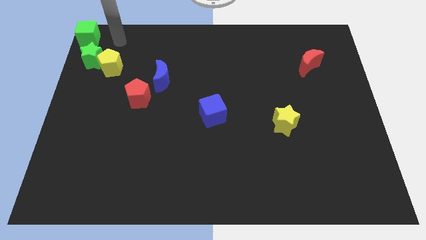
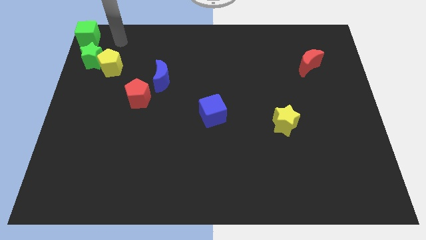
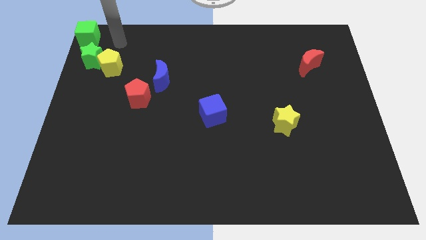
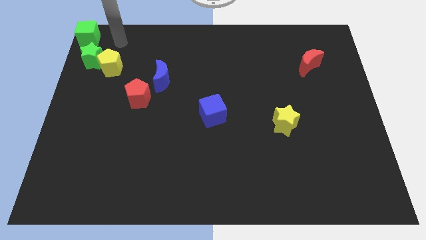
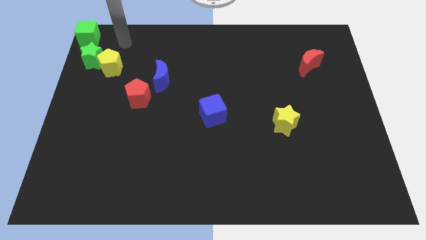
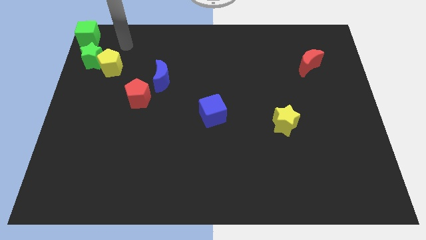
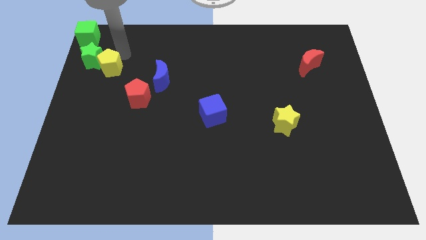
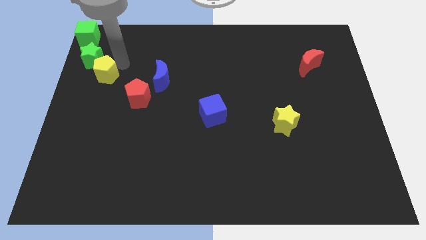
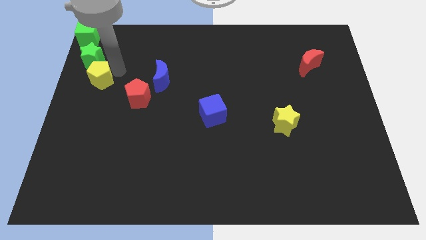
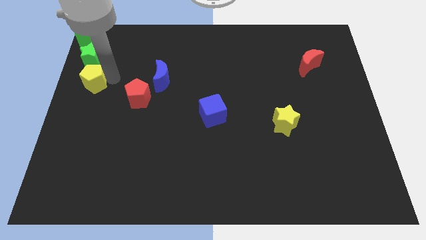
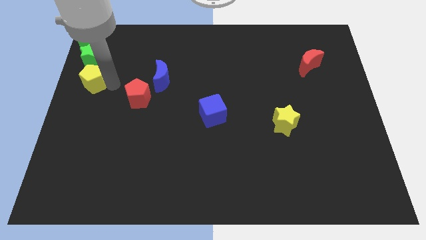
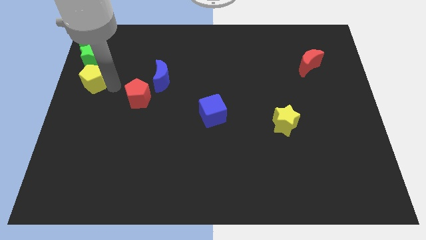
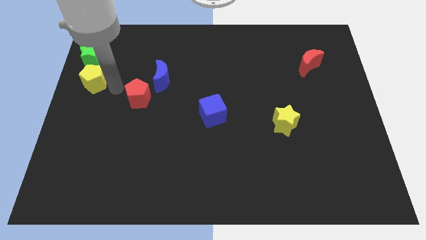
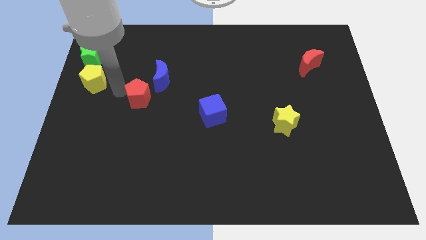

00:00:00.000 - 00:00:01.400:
push the yellow pentagon to the bottom of the green star

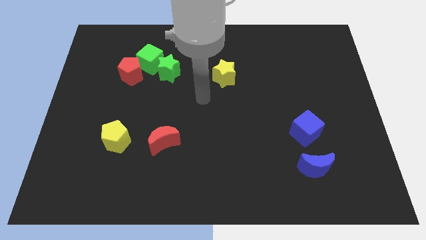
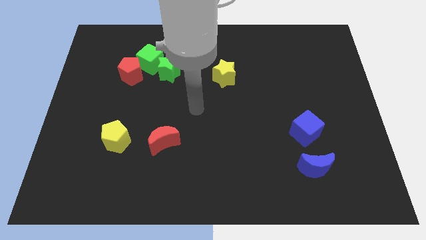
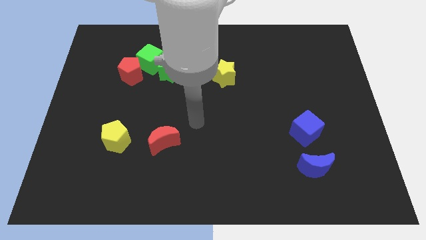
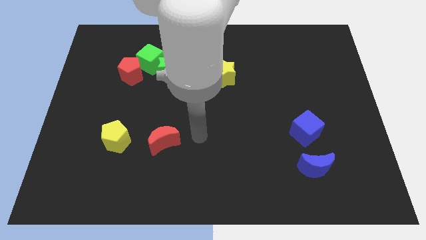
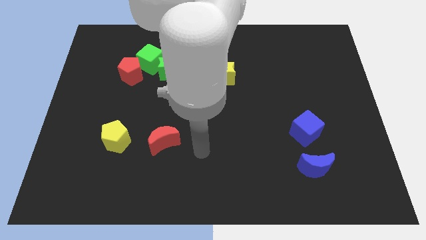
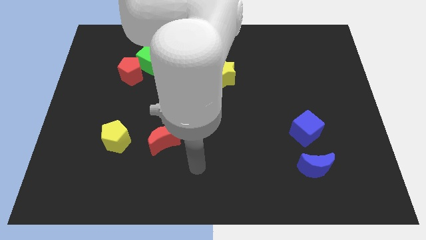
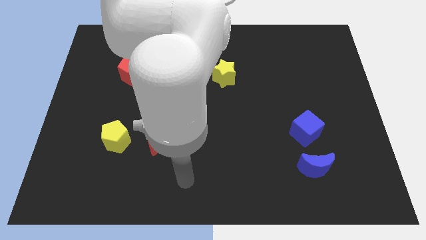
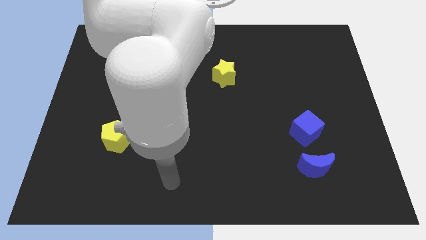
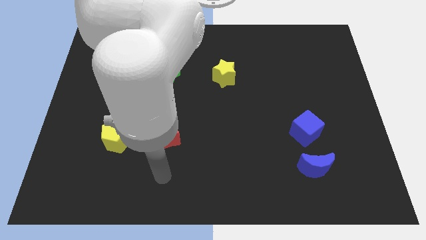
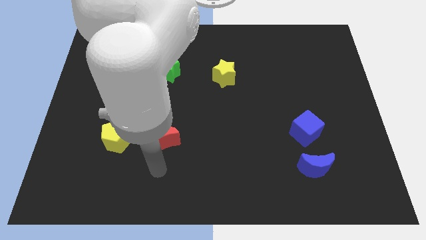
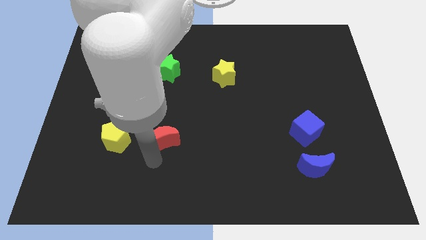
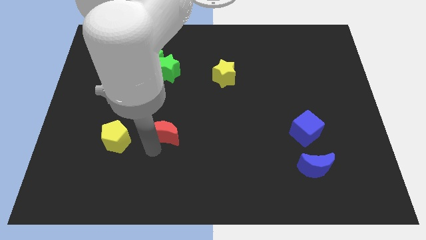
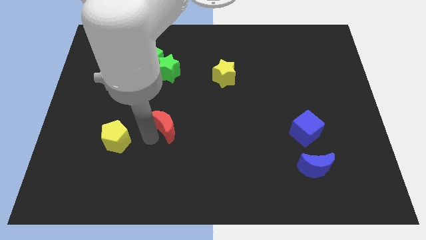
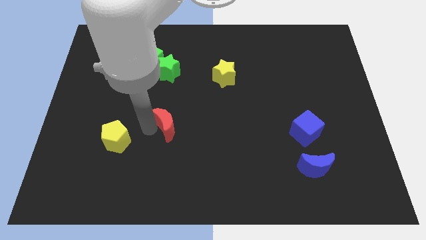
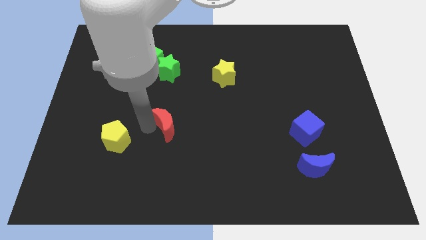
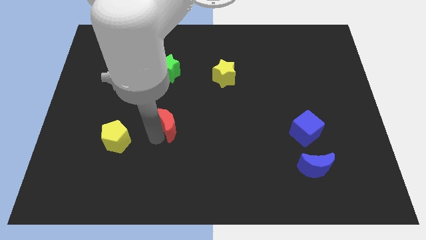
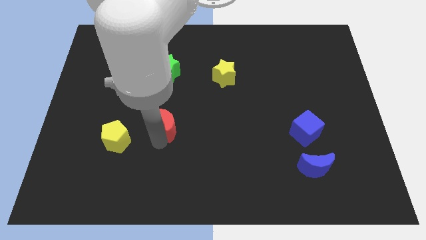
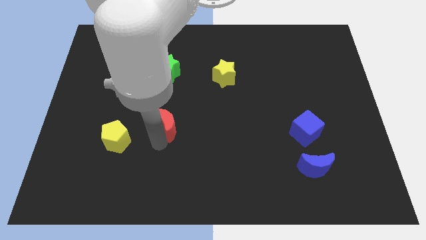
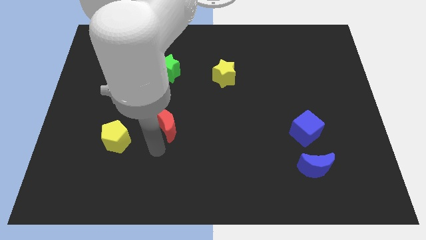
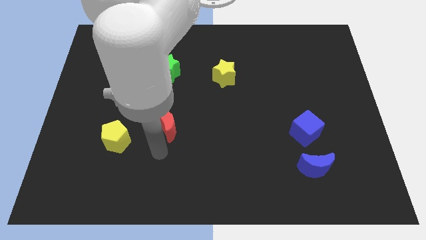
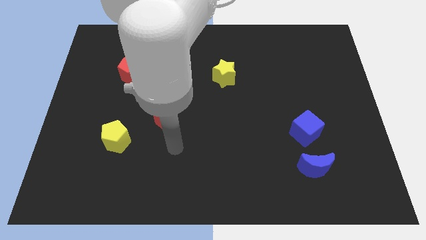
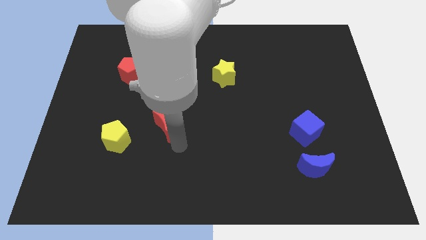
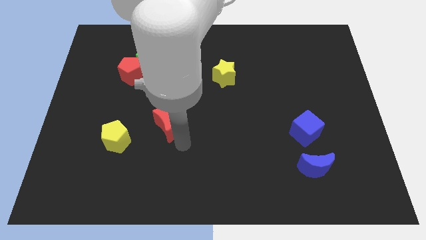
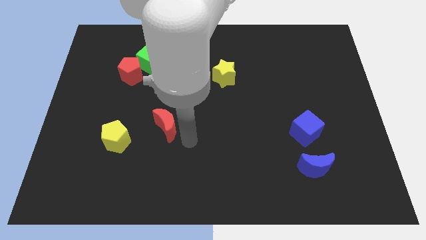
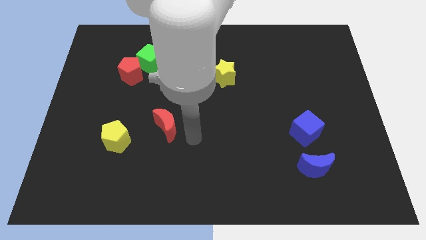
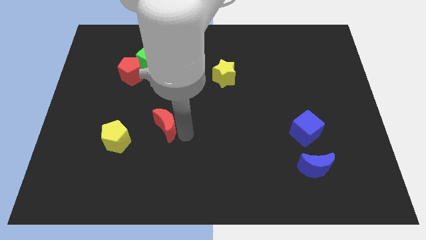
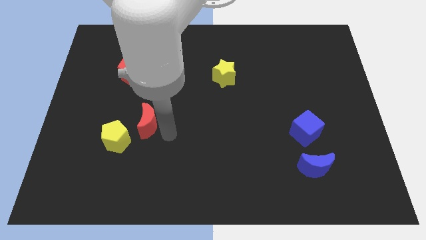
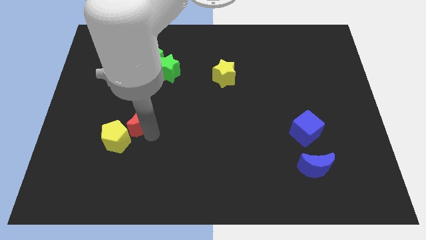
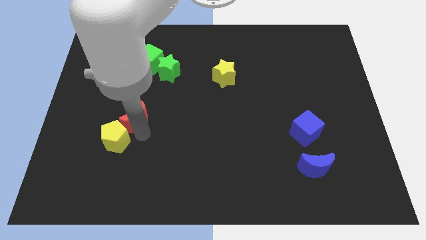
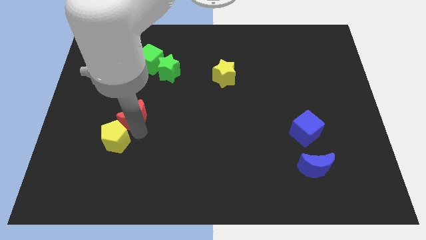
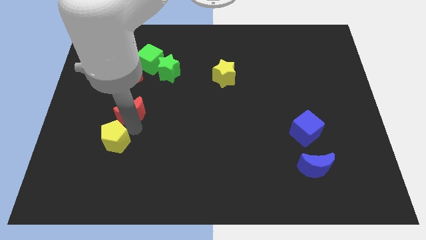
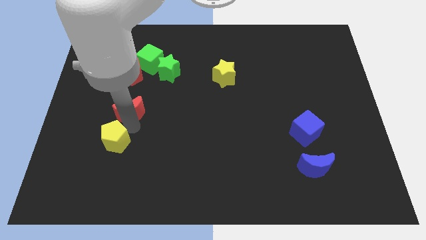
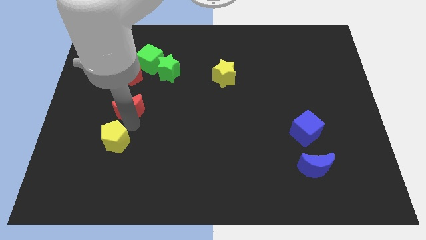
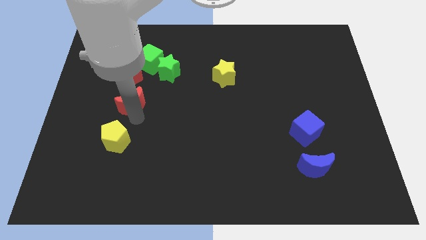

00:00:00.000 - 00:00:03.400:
push the red crescent to the bottom of the red pentagon

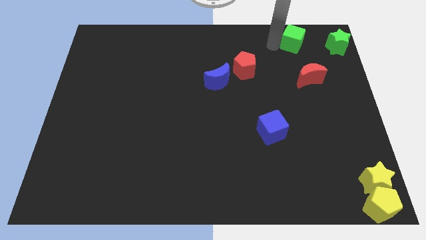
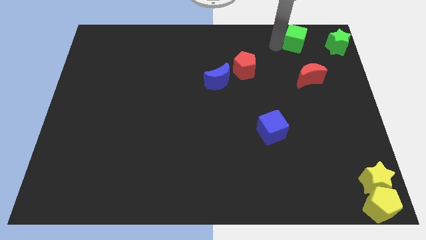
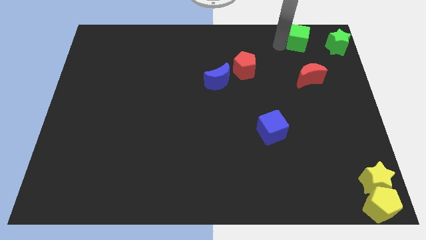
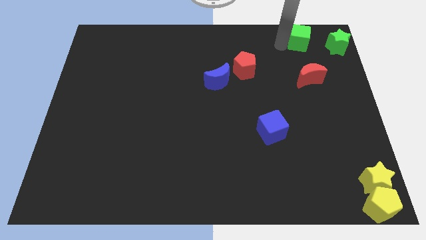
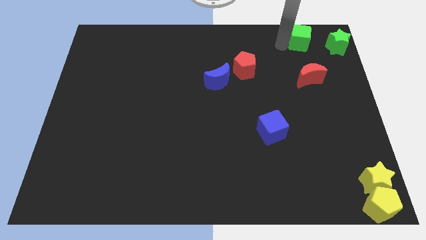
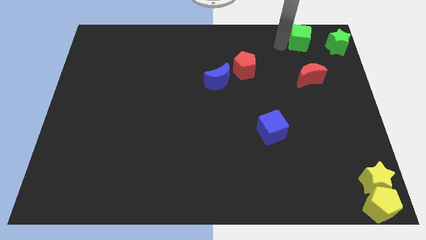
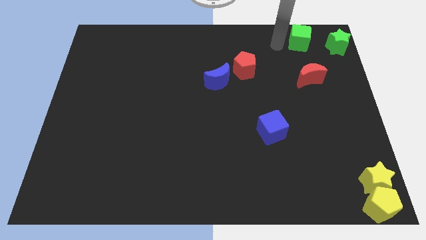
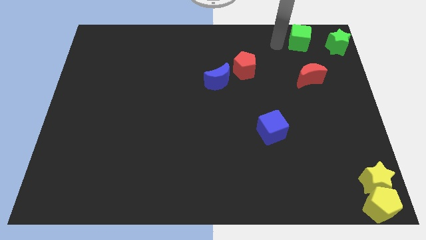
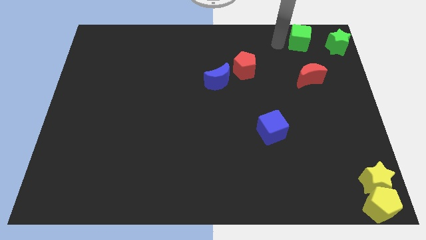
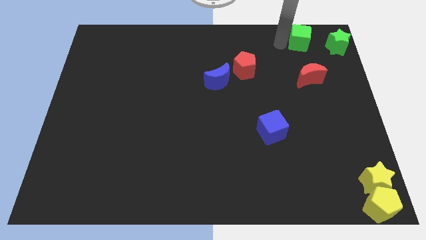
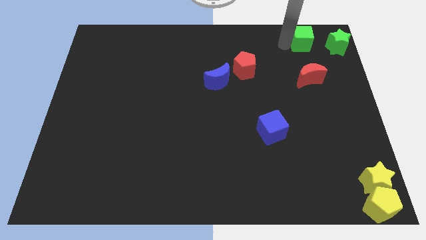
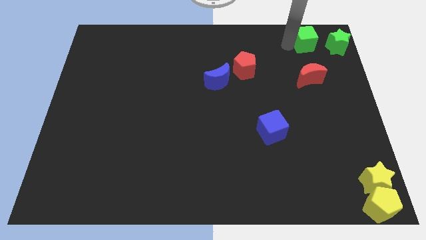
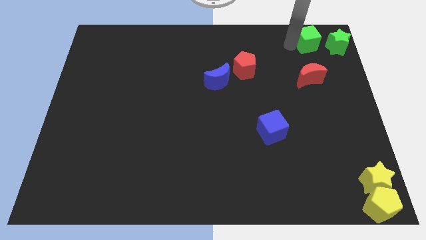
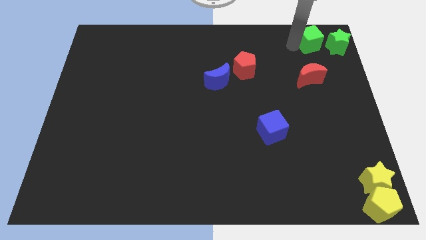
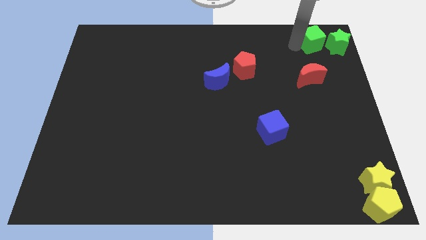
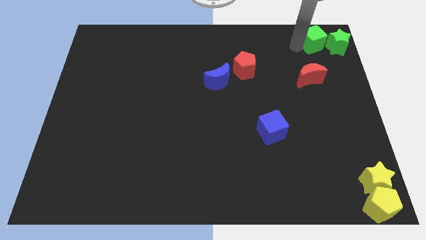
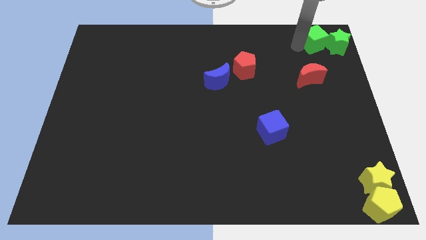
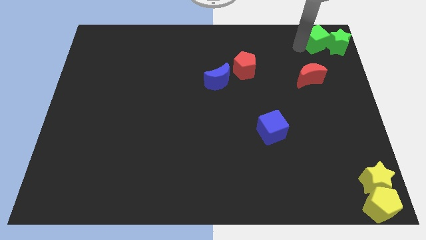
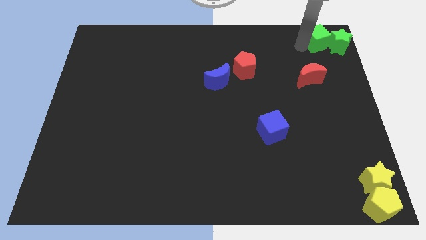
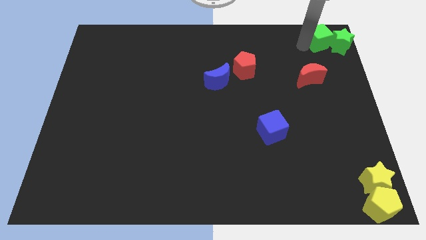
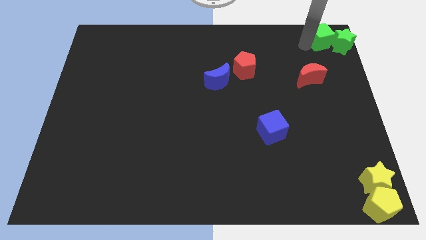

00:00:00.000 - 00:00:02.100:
move the green cube into the green star

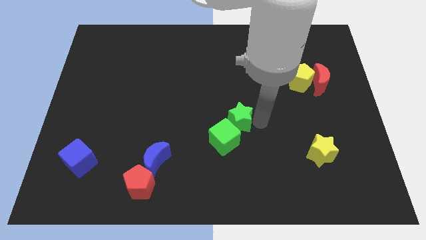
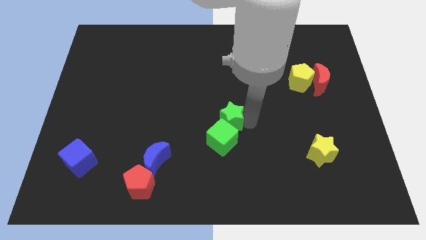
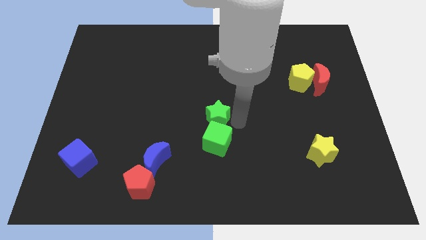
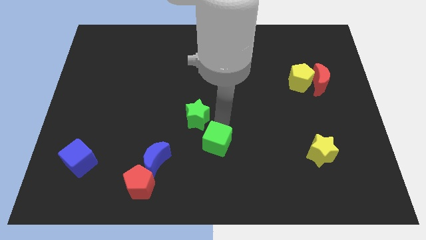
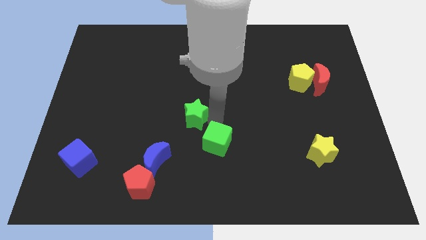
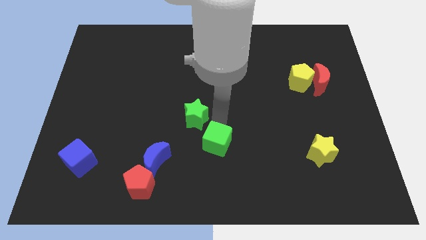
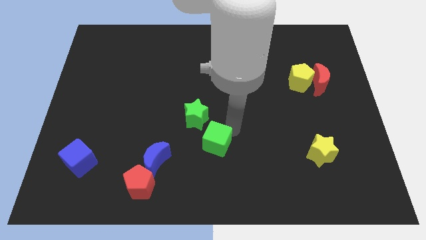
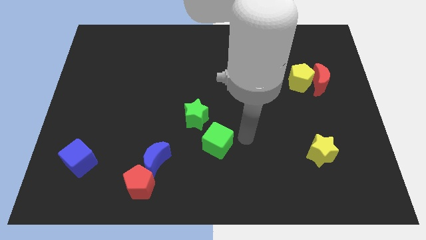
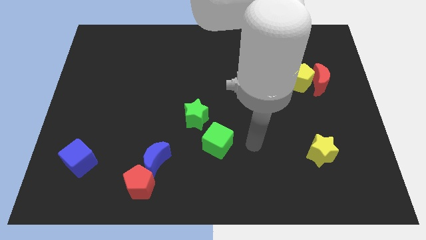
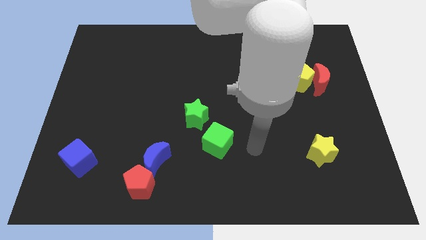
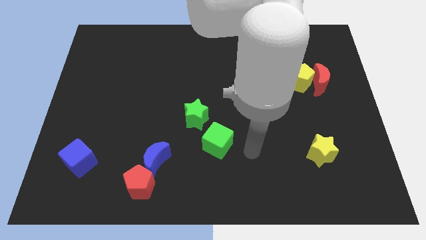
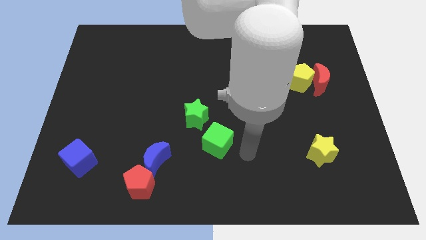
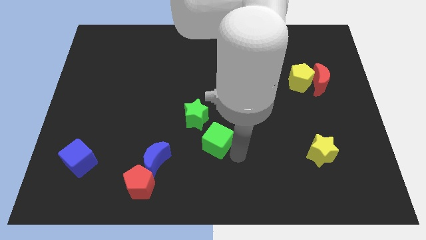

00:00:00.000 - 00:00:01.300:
separate the green star from green cube

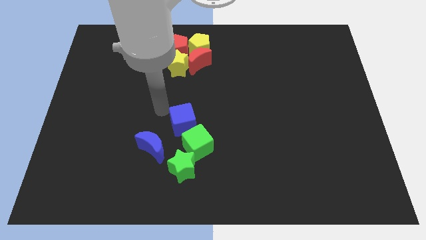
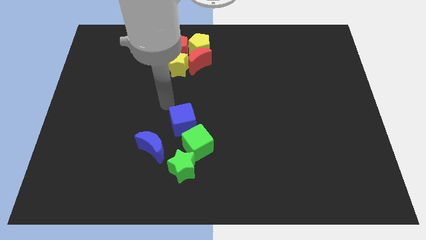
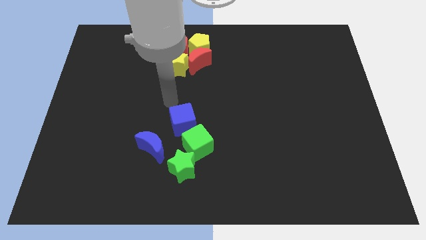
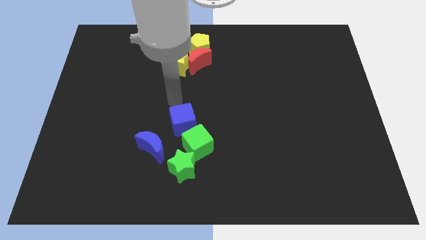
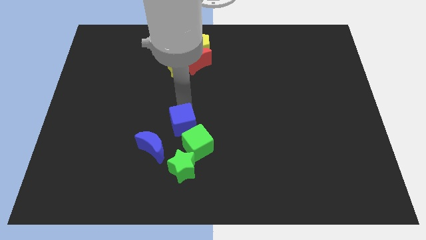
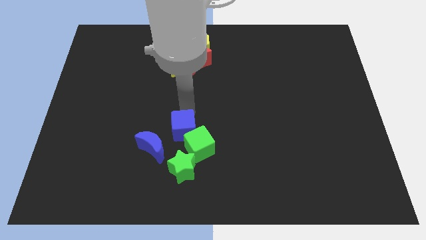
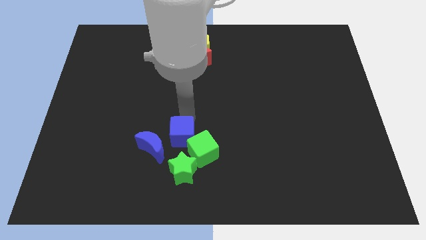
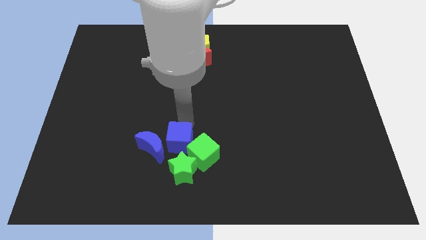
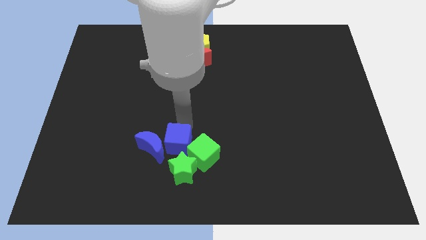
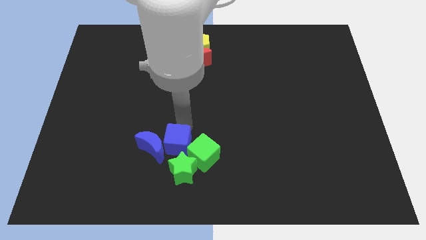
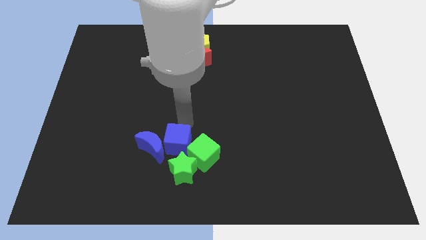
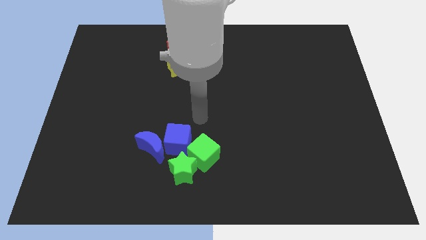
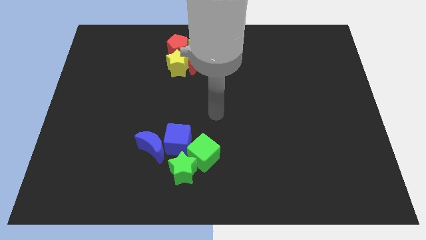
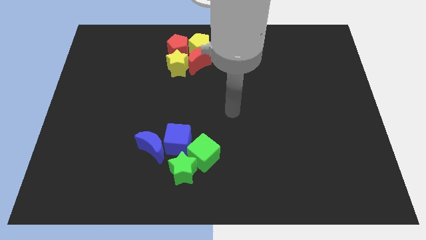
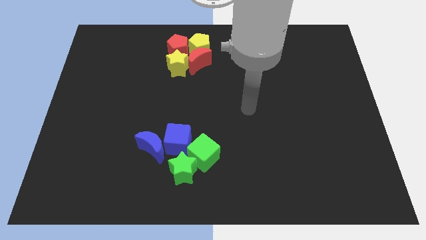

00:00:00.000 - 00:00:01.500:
place the blue cube on the top of the green star
